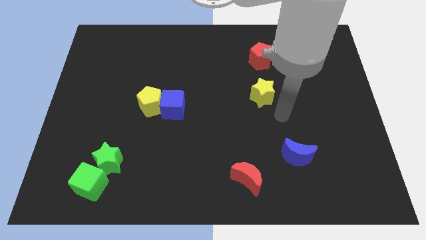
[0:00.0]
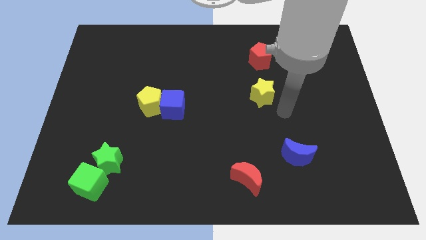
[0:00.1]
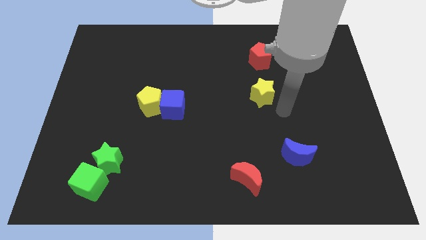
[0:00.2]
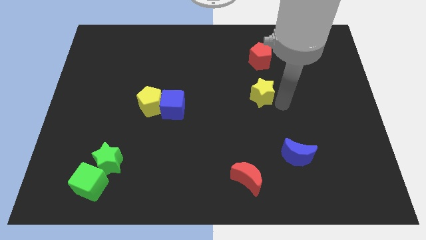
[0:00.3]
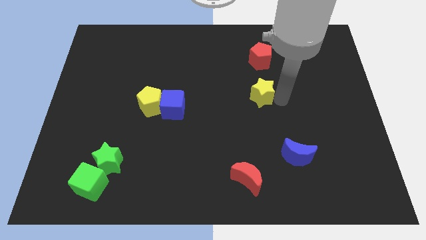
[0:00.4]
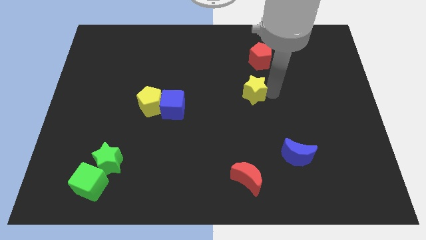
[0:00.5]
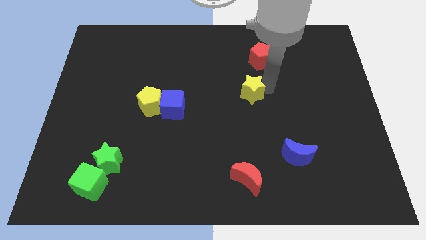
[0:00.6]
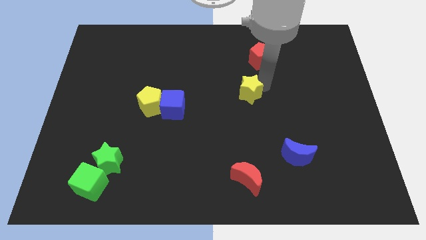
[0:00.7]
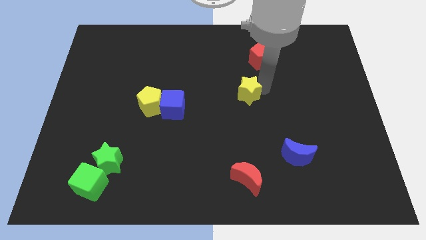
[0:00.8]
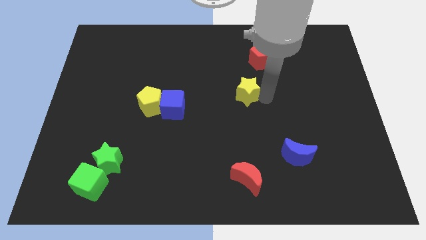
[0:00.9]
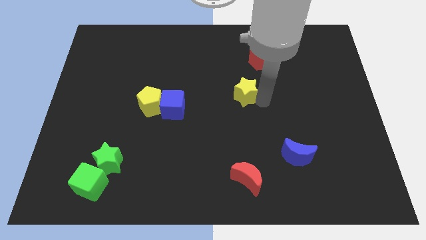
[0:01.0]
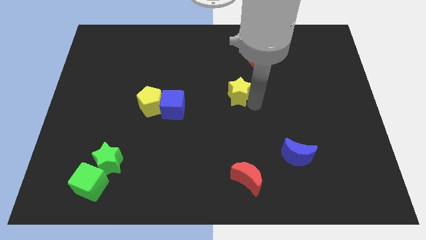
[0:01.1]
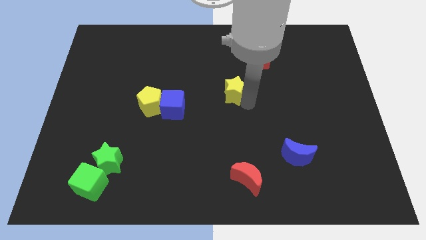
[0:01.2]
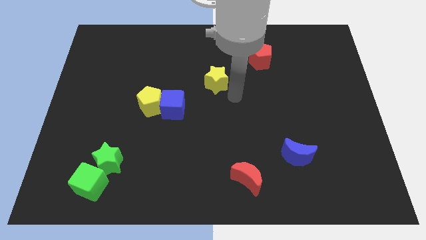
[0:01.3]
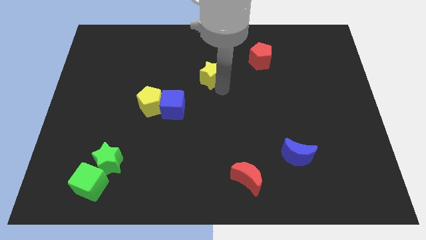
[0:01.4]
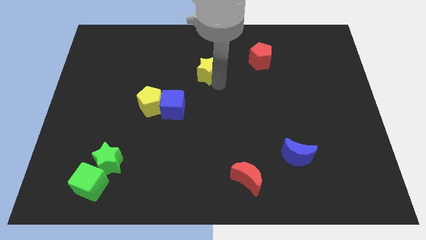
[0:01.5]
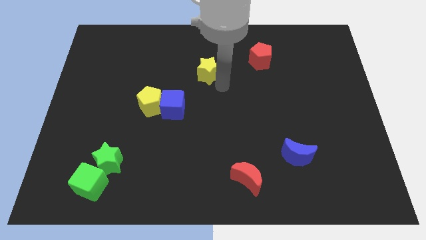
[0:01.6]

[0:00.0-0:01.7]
push the yellow star towards the top right of the blue cube

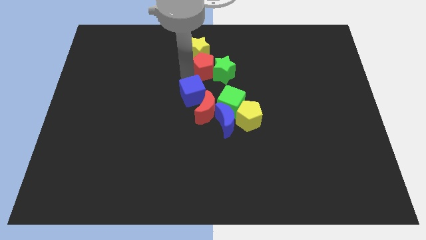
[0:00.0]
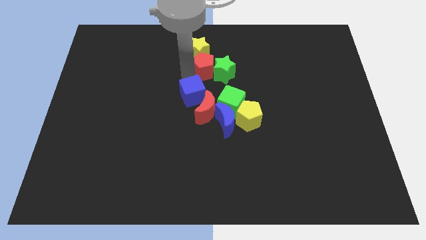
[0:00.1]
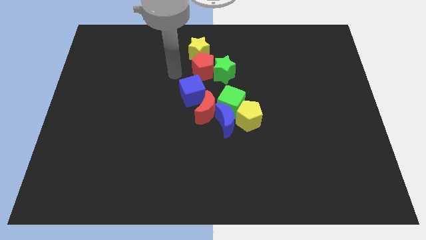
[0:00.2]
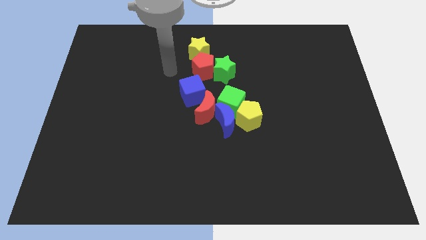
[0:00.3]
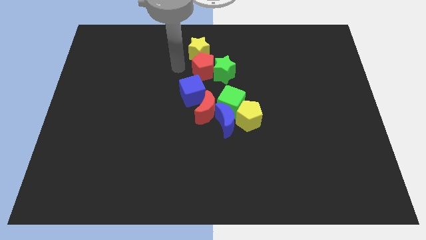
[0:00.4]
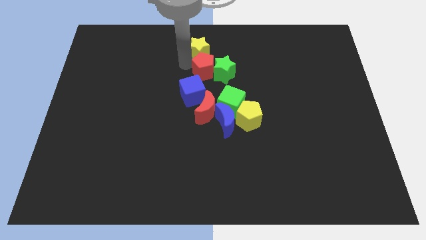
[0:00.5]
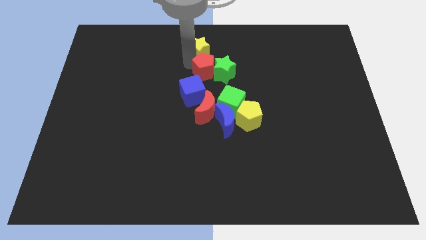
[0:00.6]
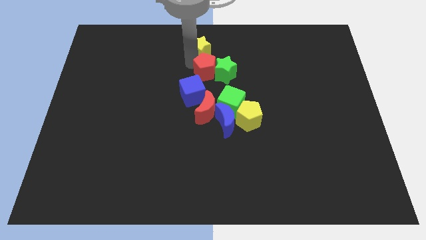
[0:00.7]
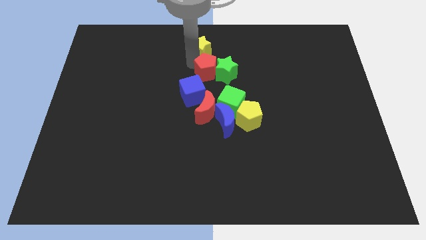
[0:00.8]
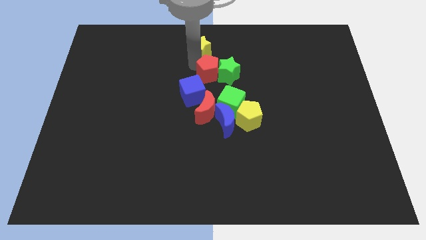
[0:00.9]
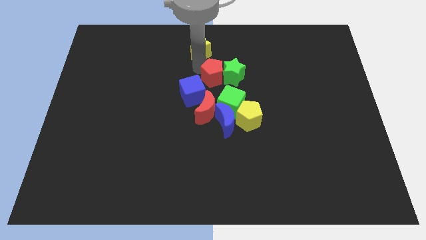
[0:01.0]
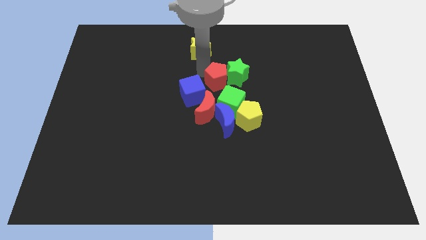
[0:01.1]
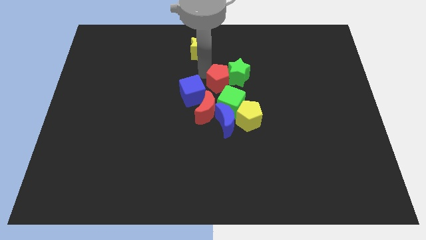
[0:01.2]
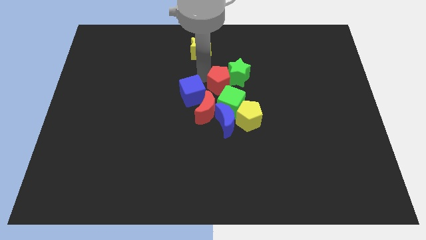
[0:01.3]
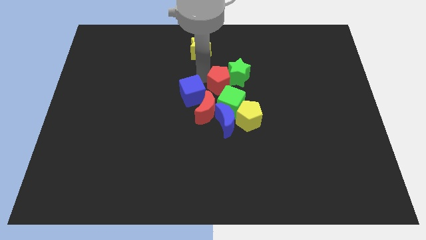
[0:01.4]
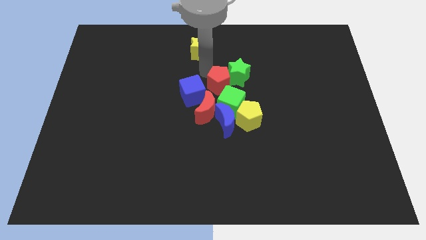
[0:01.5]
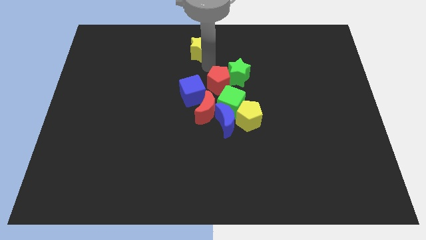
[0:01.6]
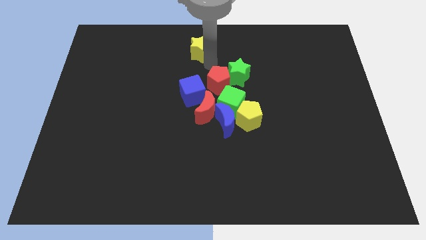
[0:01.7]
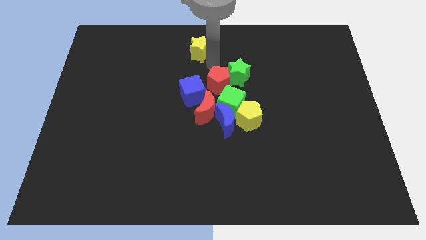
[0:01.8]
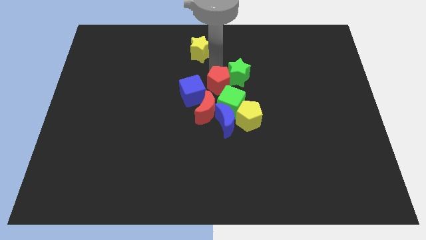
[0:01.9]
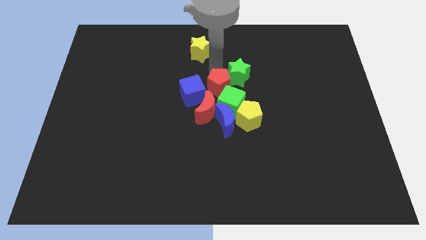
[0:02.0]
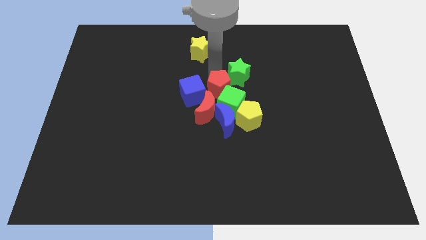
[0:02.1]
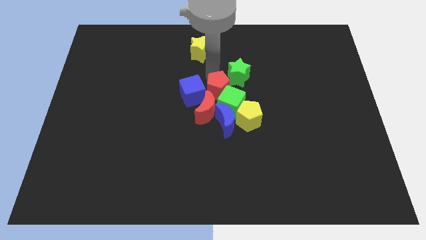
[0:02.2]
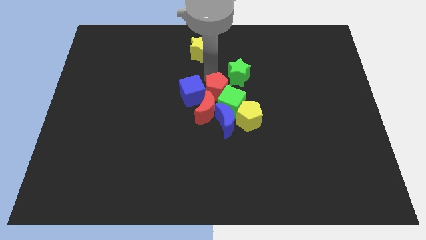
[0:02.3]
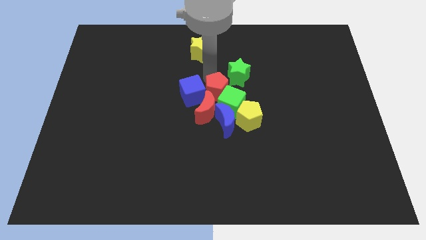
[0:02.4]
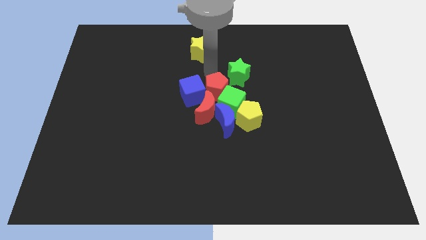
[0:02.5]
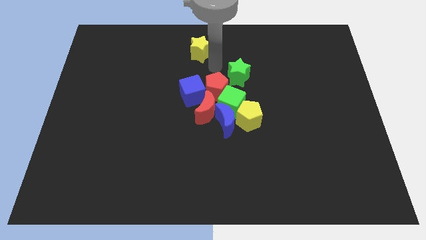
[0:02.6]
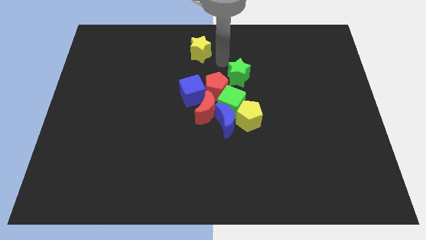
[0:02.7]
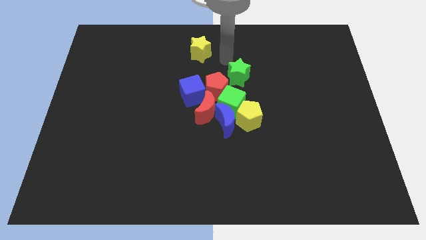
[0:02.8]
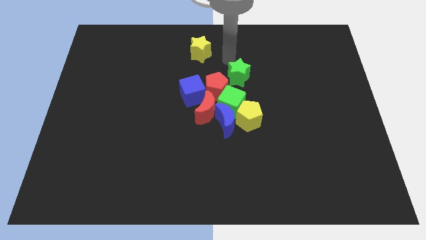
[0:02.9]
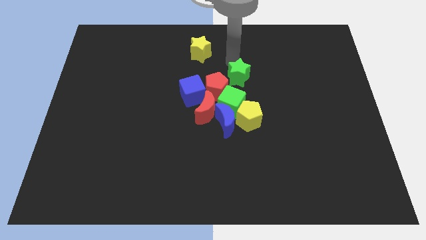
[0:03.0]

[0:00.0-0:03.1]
push red pentagon to the top of red crescent

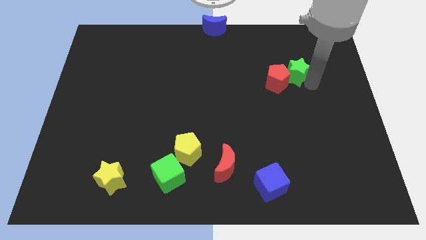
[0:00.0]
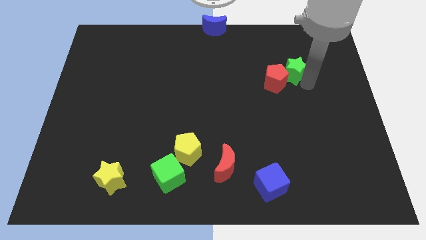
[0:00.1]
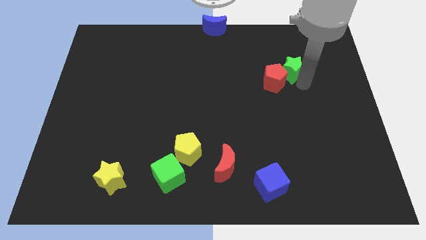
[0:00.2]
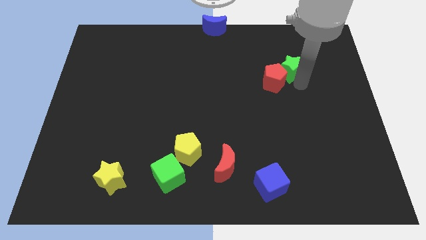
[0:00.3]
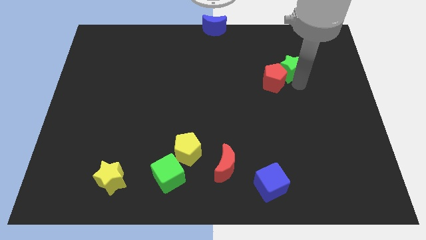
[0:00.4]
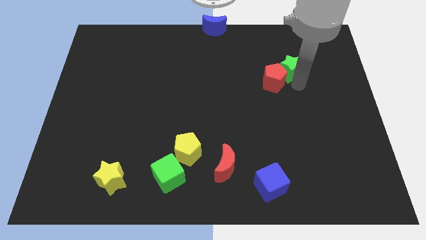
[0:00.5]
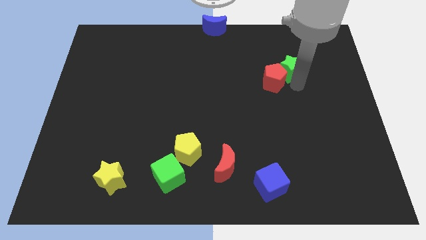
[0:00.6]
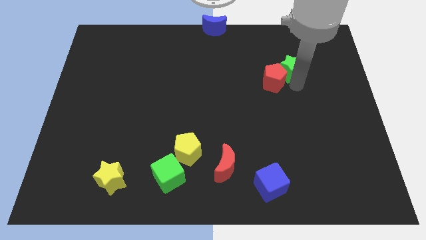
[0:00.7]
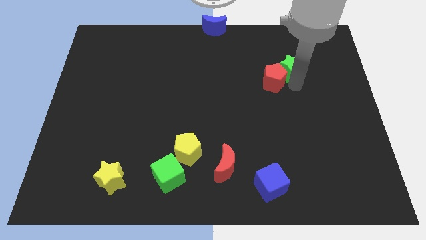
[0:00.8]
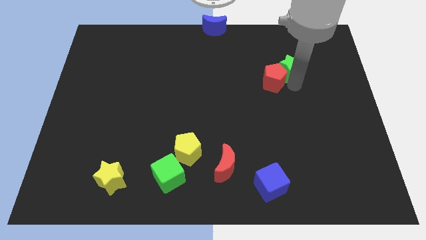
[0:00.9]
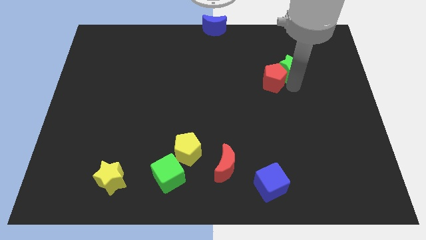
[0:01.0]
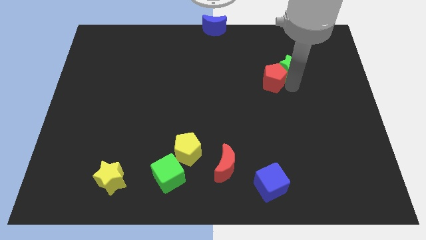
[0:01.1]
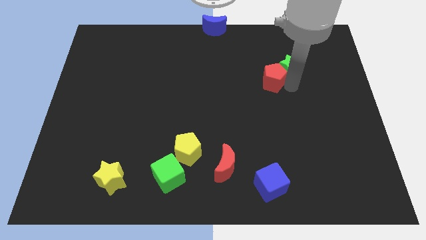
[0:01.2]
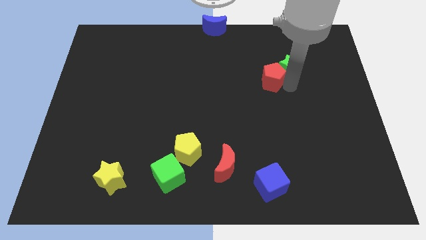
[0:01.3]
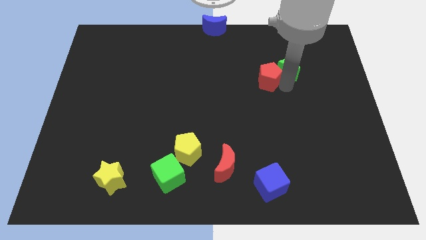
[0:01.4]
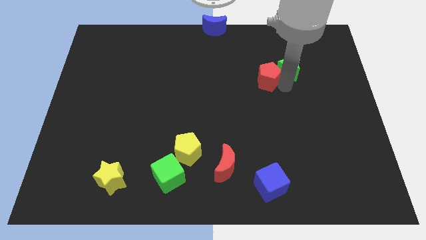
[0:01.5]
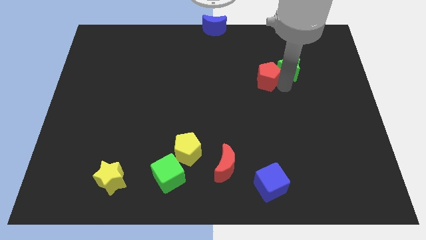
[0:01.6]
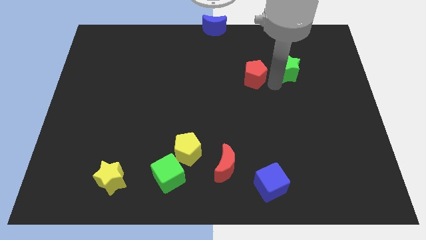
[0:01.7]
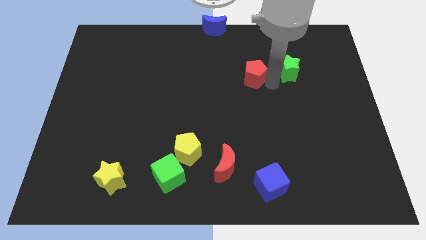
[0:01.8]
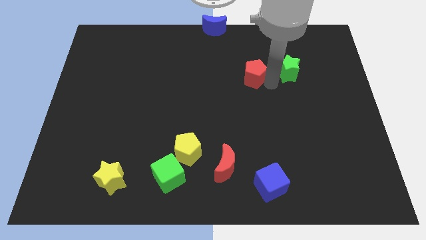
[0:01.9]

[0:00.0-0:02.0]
separate the green star from the red pentagon

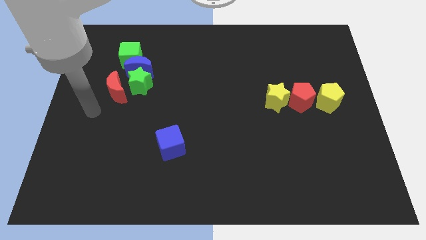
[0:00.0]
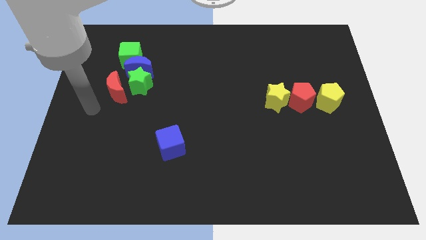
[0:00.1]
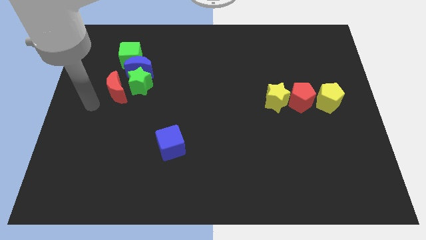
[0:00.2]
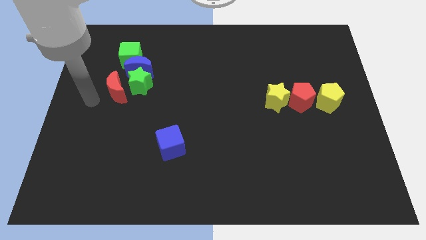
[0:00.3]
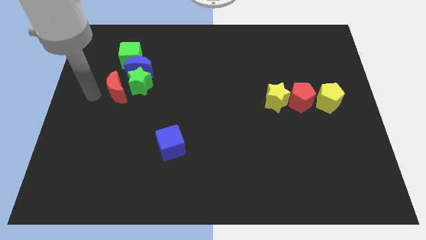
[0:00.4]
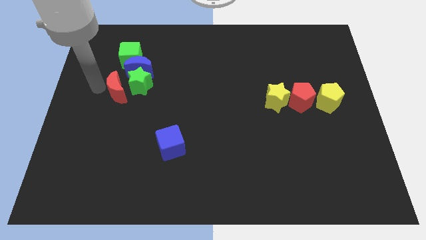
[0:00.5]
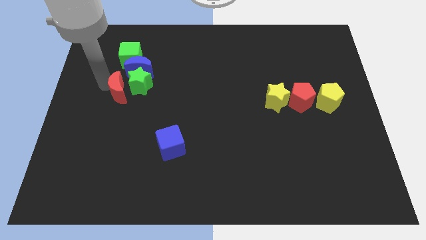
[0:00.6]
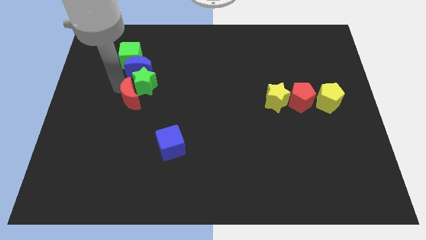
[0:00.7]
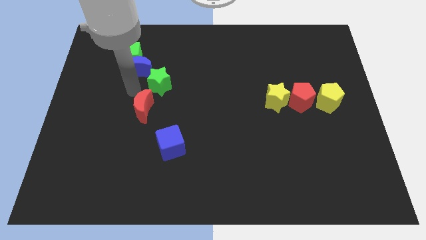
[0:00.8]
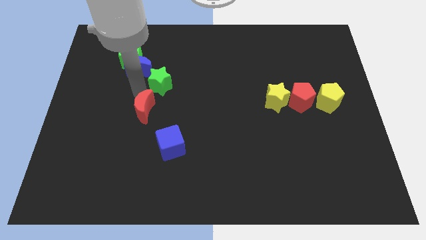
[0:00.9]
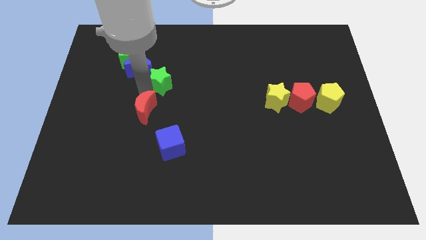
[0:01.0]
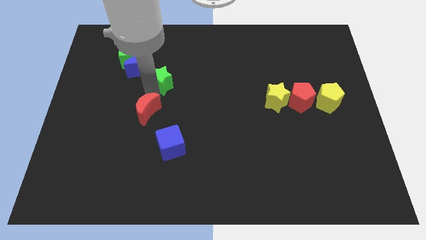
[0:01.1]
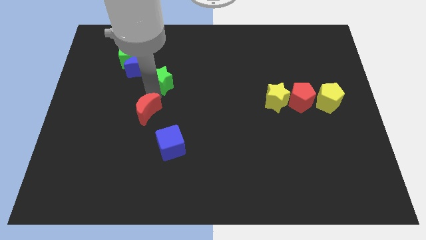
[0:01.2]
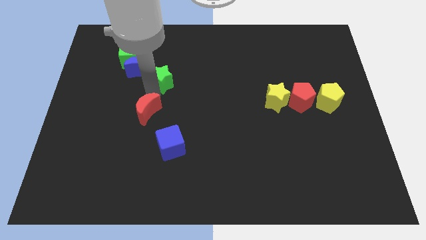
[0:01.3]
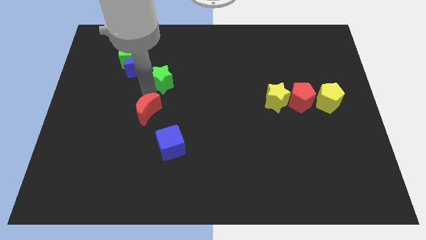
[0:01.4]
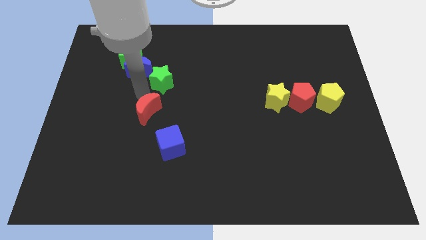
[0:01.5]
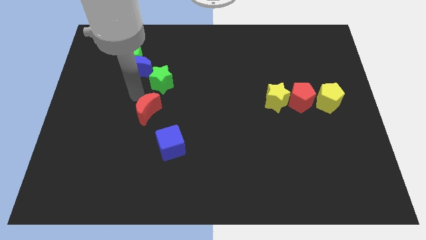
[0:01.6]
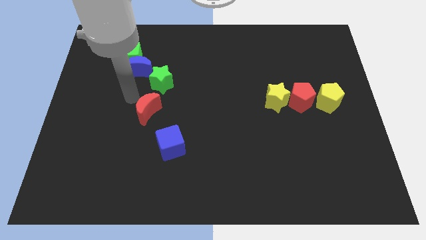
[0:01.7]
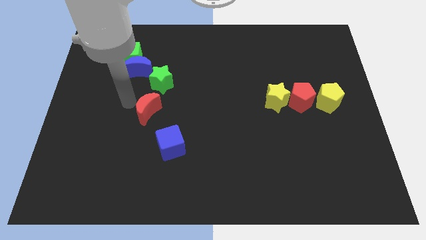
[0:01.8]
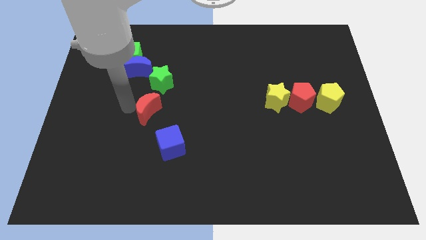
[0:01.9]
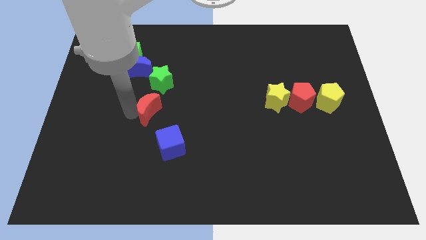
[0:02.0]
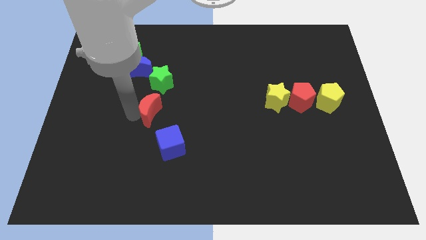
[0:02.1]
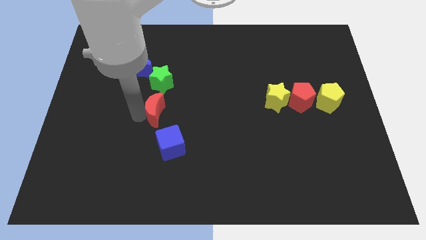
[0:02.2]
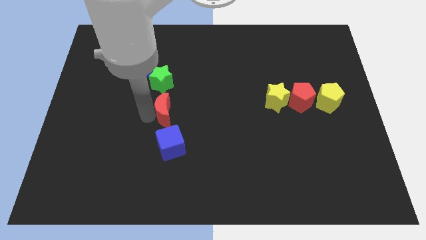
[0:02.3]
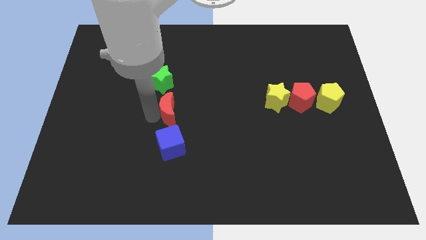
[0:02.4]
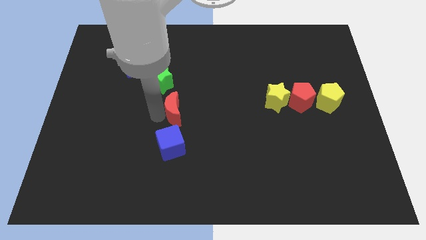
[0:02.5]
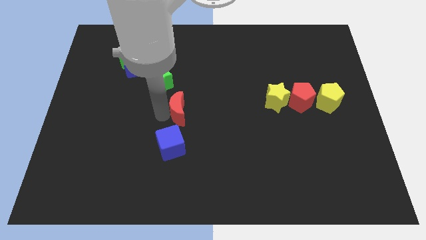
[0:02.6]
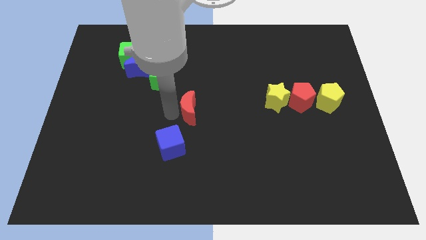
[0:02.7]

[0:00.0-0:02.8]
place the red moon diagonally to the blue cube
